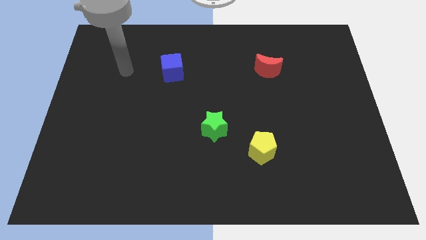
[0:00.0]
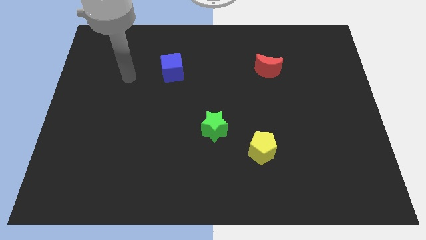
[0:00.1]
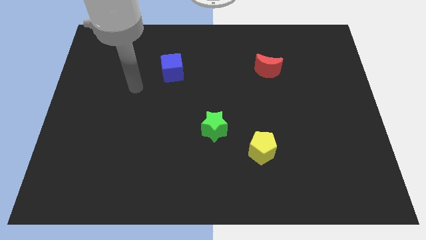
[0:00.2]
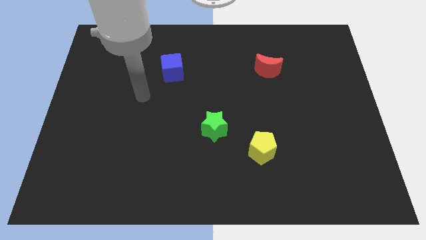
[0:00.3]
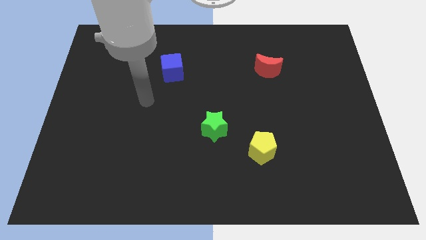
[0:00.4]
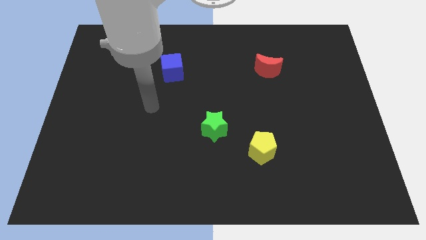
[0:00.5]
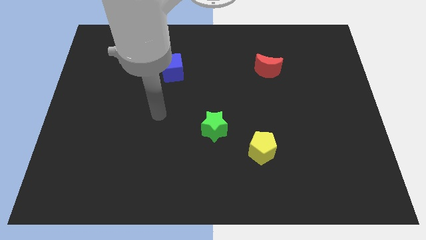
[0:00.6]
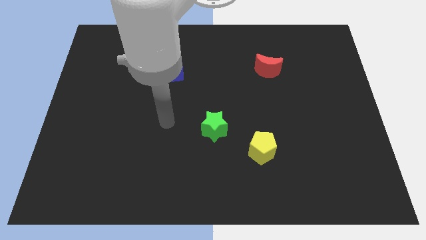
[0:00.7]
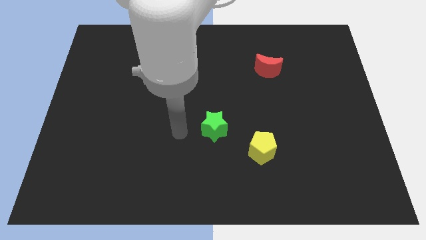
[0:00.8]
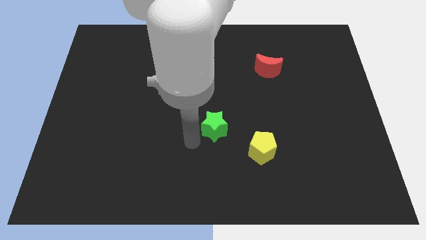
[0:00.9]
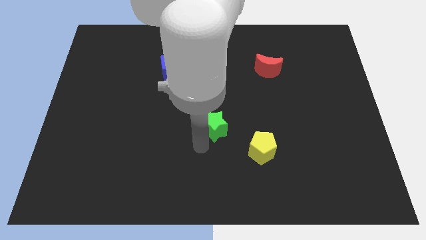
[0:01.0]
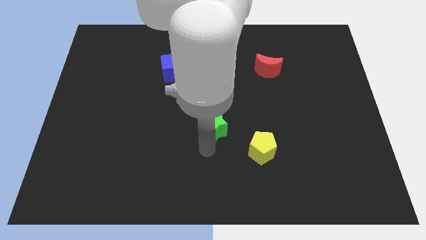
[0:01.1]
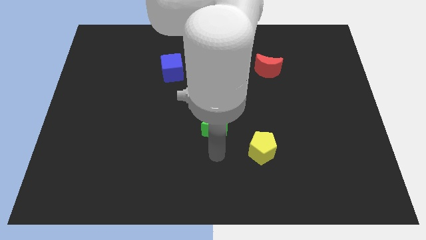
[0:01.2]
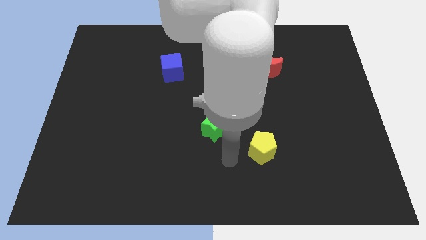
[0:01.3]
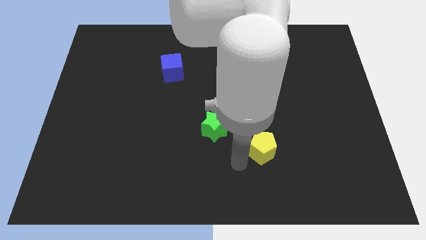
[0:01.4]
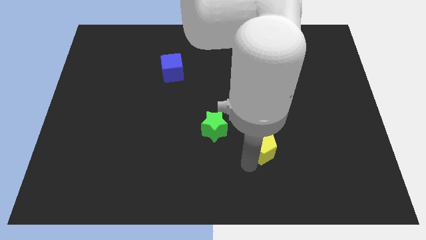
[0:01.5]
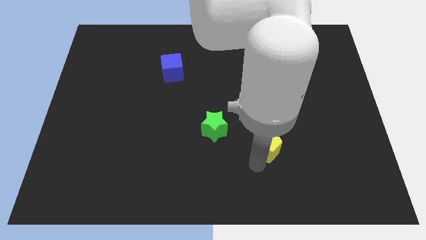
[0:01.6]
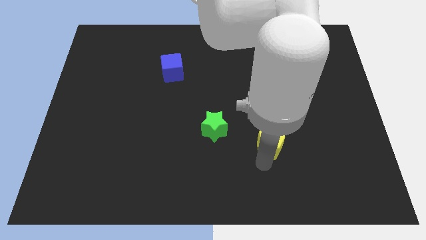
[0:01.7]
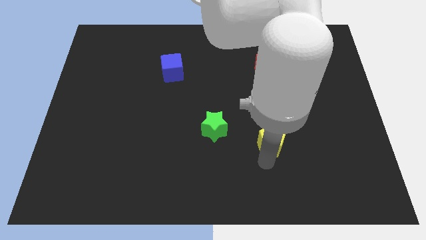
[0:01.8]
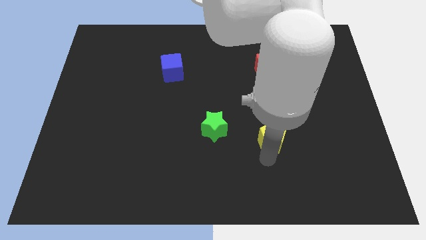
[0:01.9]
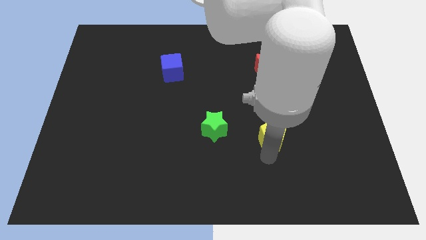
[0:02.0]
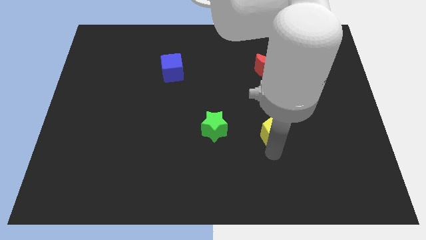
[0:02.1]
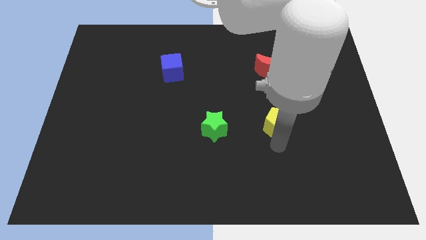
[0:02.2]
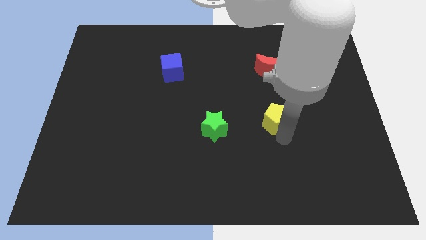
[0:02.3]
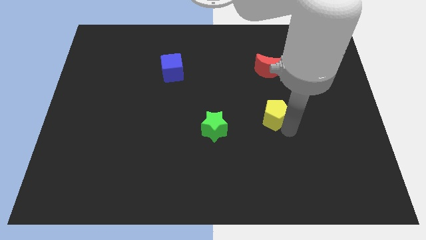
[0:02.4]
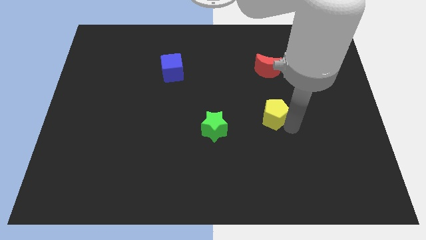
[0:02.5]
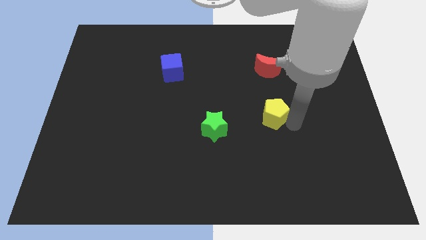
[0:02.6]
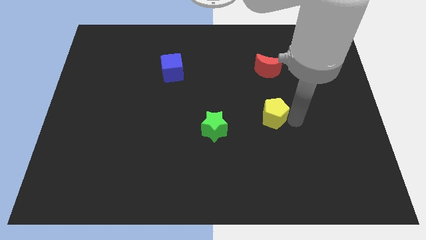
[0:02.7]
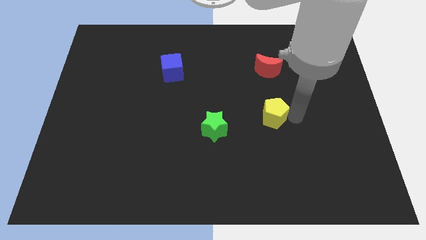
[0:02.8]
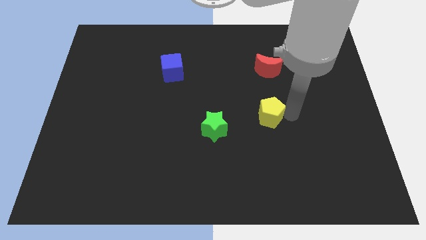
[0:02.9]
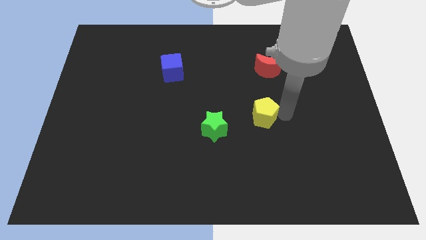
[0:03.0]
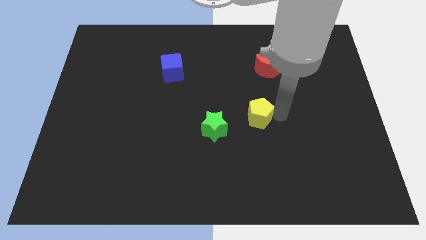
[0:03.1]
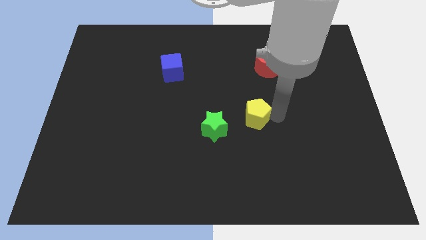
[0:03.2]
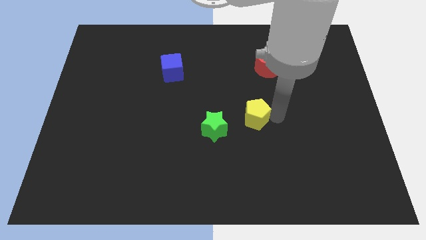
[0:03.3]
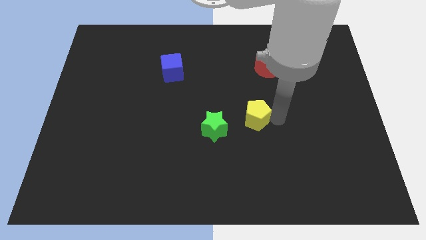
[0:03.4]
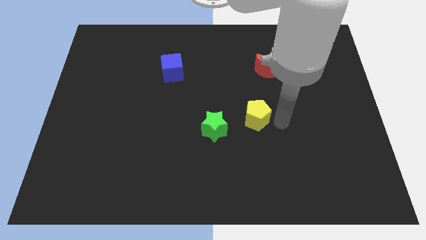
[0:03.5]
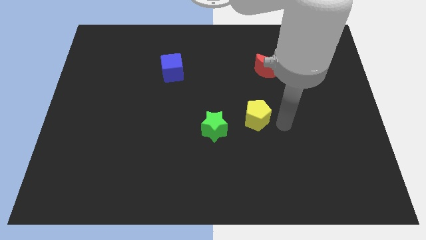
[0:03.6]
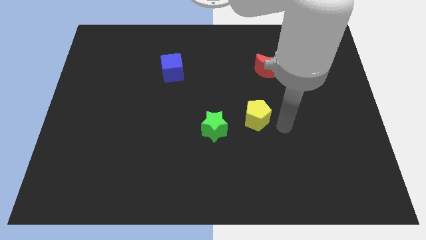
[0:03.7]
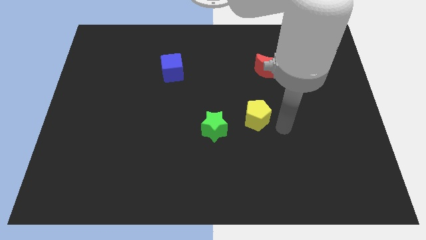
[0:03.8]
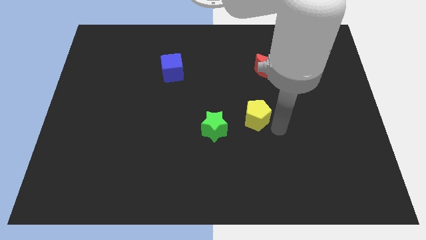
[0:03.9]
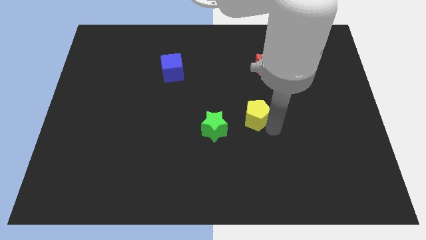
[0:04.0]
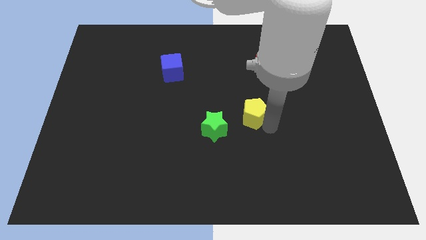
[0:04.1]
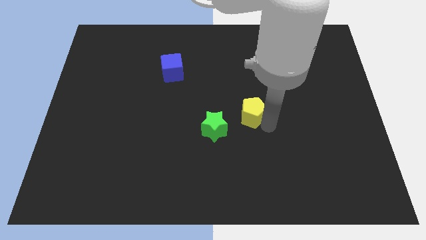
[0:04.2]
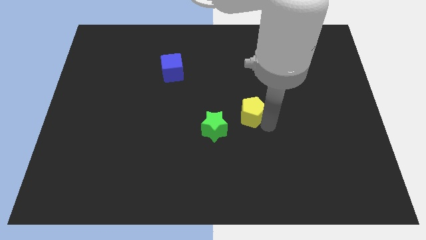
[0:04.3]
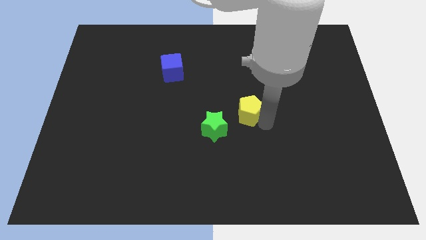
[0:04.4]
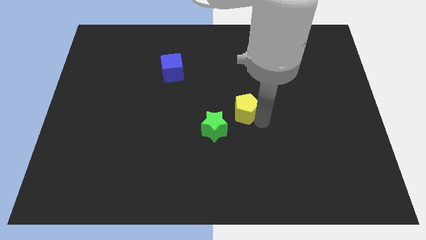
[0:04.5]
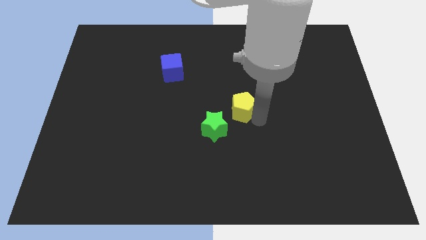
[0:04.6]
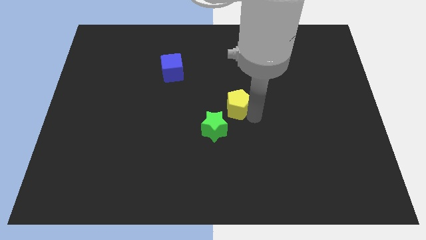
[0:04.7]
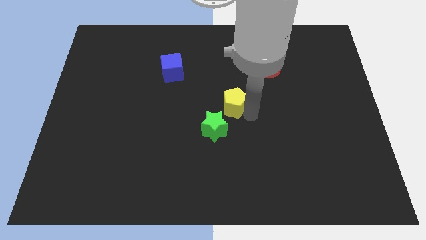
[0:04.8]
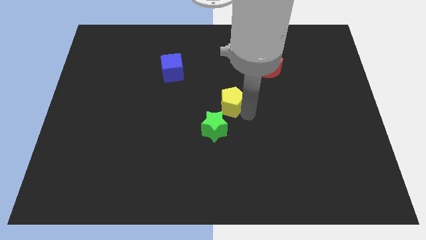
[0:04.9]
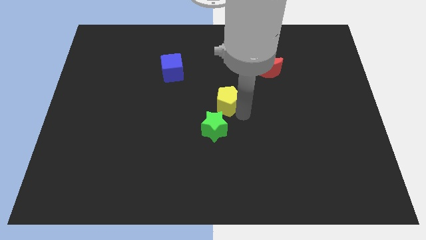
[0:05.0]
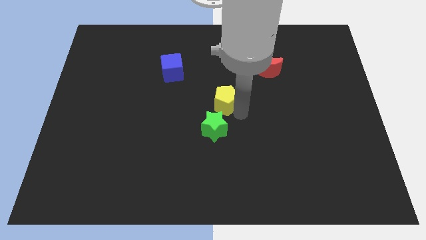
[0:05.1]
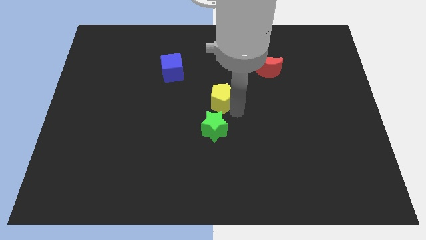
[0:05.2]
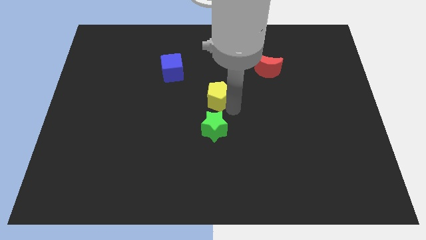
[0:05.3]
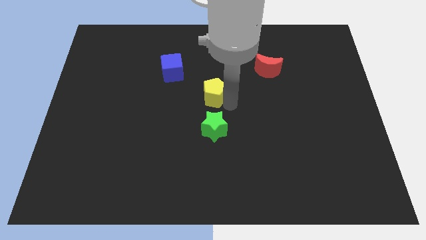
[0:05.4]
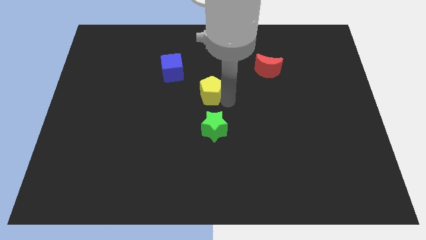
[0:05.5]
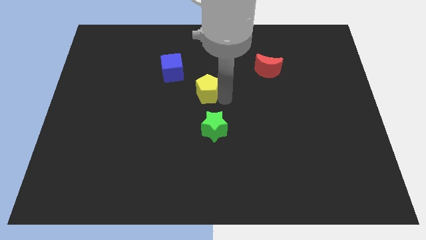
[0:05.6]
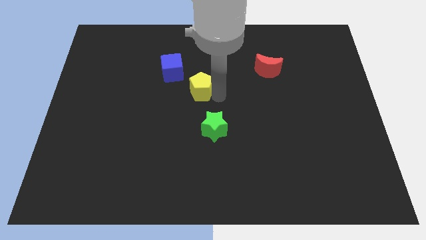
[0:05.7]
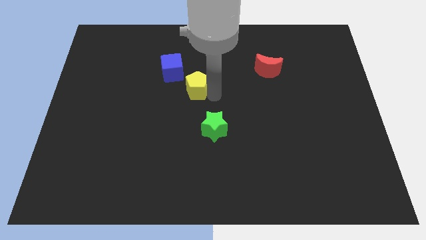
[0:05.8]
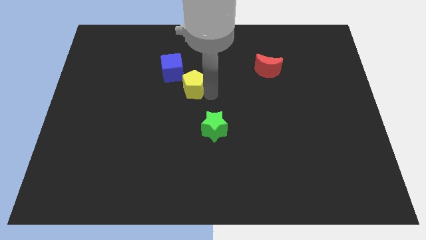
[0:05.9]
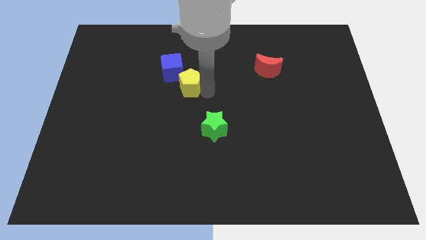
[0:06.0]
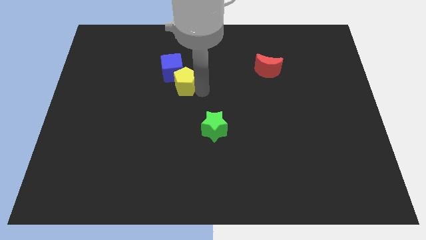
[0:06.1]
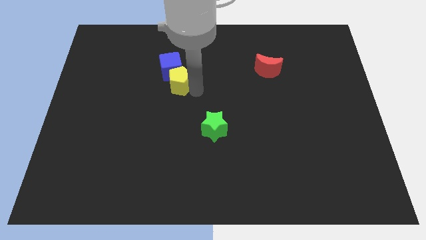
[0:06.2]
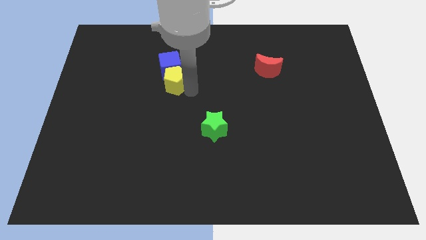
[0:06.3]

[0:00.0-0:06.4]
move the pentagon to the cube

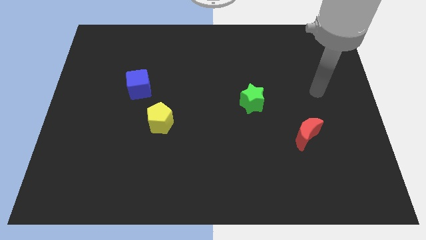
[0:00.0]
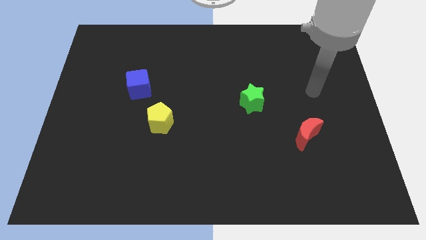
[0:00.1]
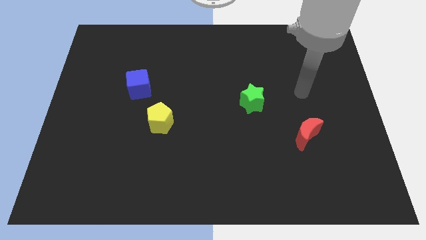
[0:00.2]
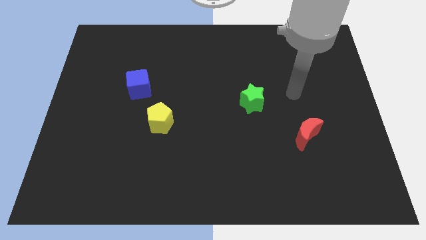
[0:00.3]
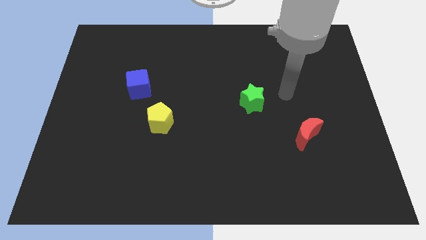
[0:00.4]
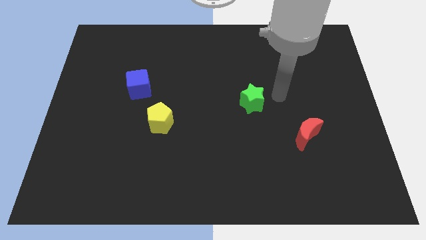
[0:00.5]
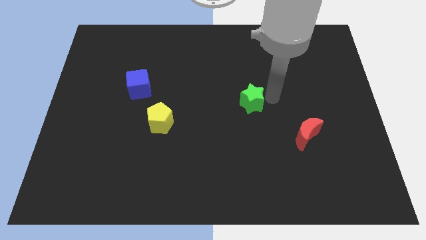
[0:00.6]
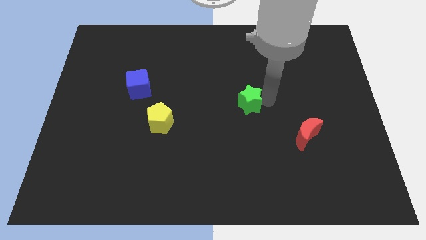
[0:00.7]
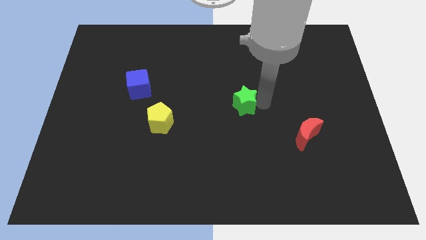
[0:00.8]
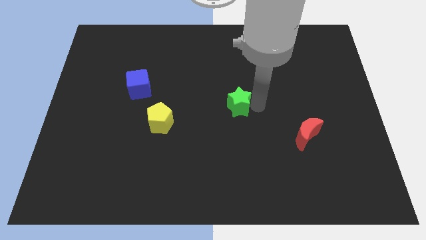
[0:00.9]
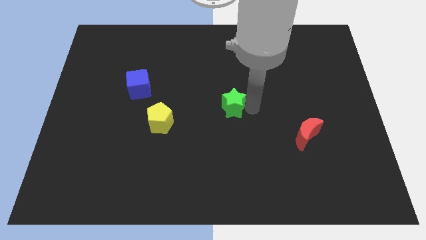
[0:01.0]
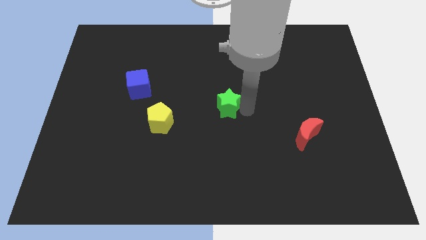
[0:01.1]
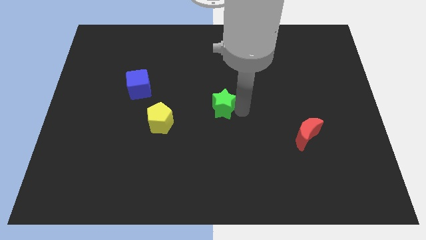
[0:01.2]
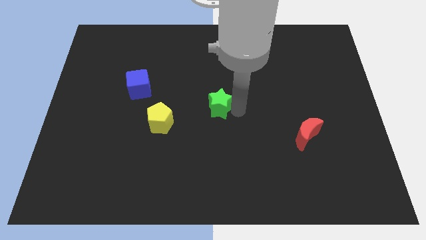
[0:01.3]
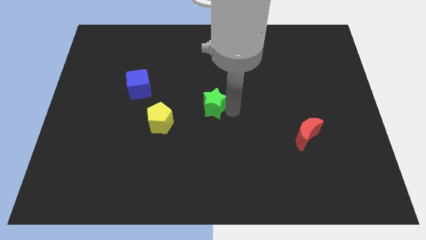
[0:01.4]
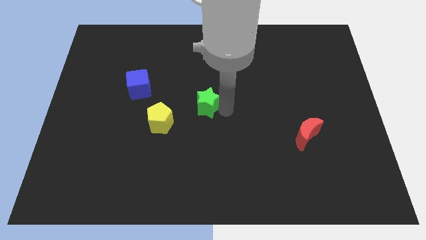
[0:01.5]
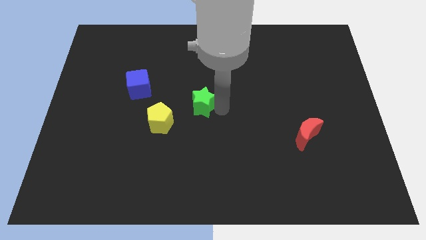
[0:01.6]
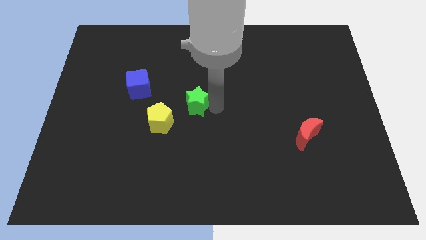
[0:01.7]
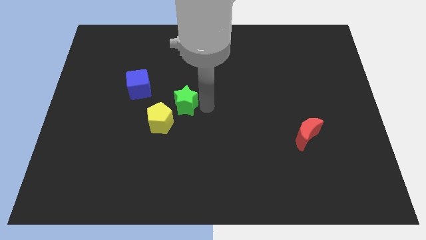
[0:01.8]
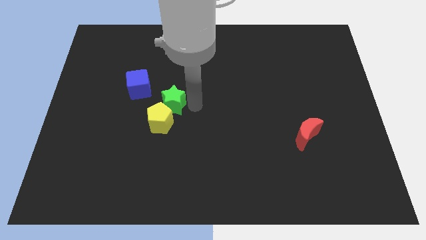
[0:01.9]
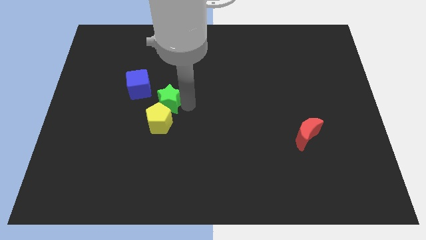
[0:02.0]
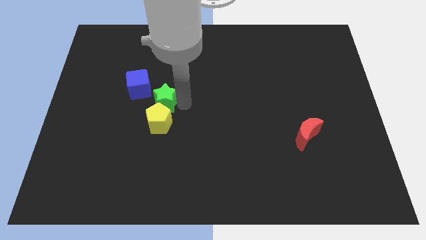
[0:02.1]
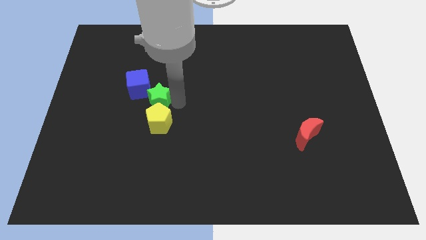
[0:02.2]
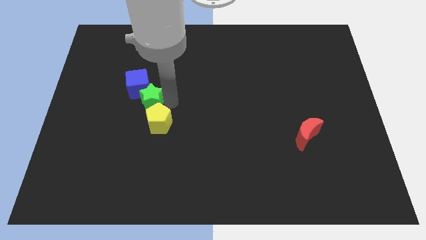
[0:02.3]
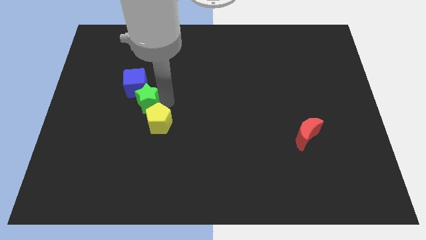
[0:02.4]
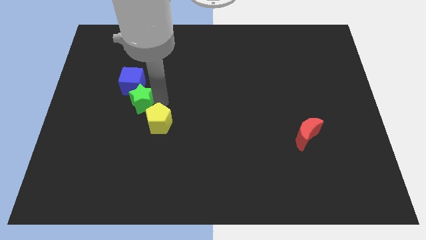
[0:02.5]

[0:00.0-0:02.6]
move the green block towards the cube
